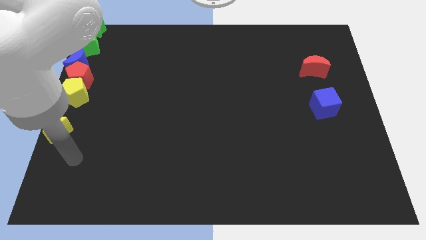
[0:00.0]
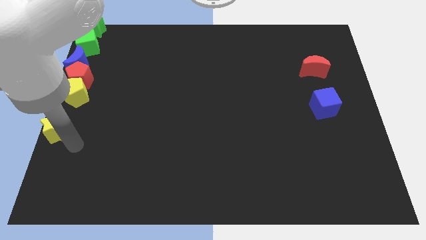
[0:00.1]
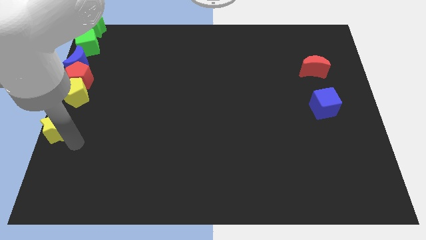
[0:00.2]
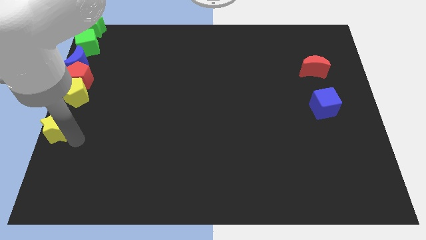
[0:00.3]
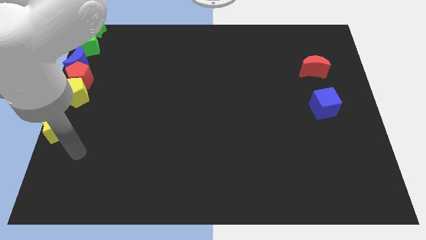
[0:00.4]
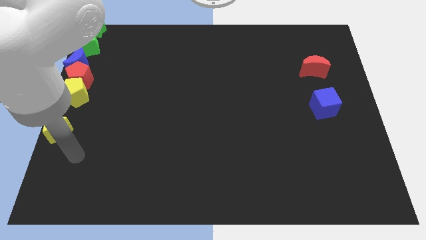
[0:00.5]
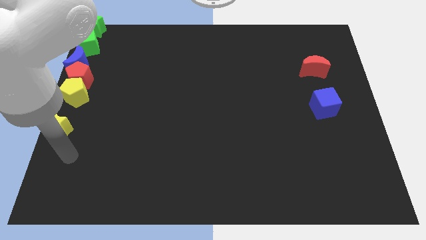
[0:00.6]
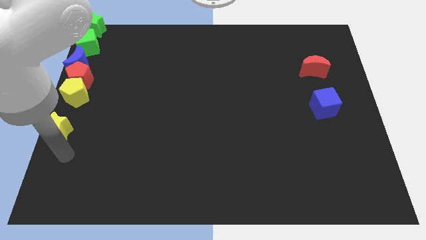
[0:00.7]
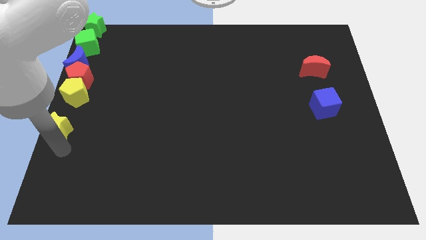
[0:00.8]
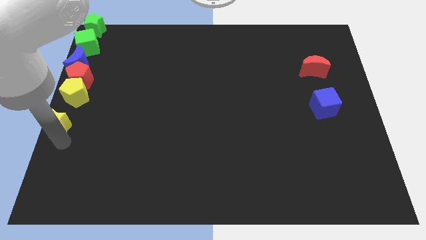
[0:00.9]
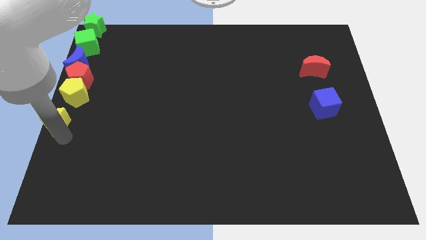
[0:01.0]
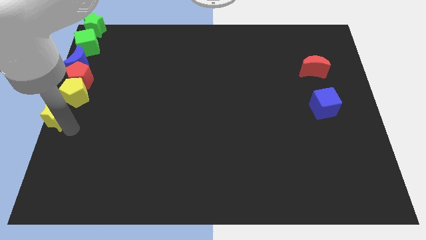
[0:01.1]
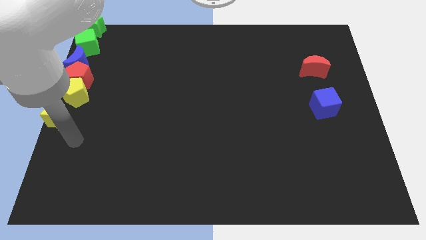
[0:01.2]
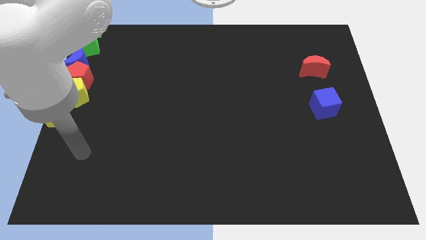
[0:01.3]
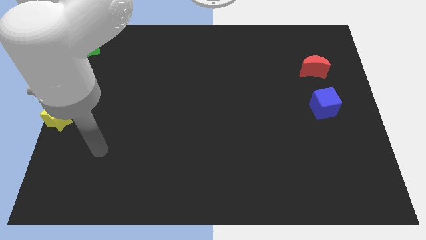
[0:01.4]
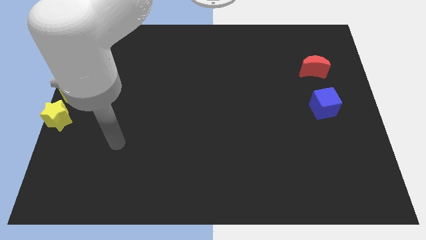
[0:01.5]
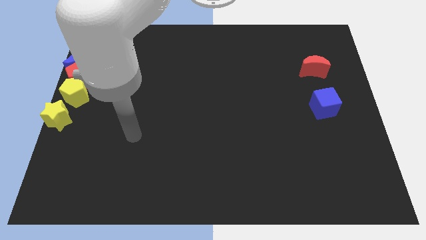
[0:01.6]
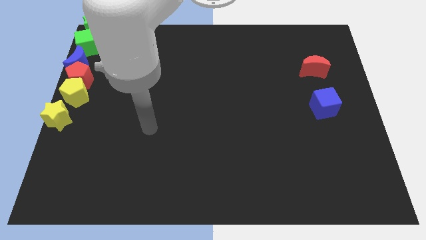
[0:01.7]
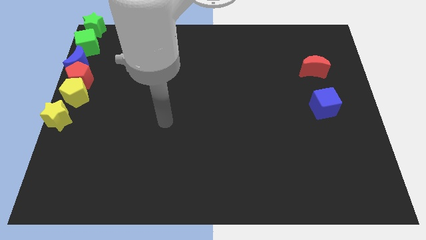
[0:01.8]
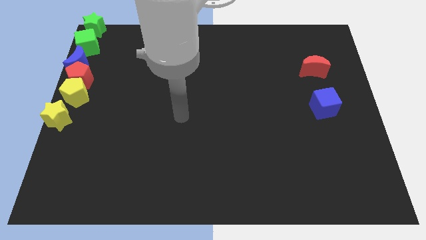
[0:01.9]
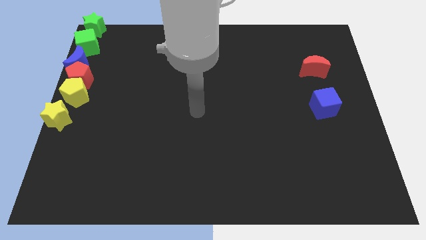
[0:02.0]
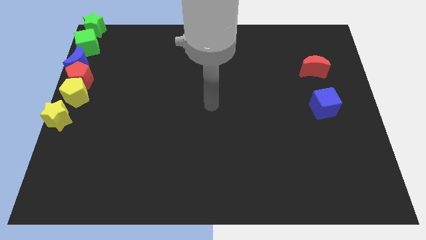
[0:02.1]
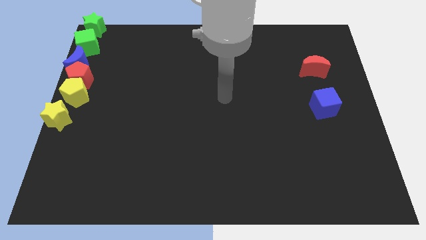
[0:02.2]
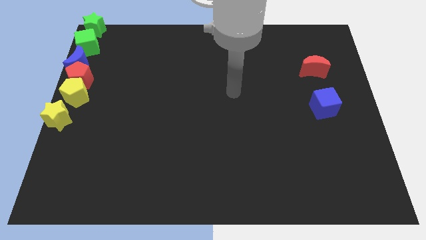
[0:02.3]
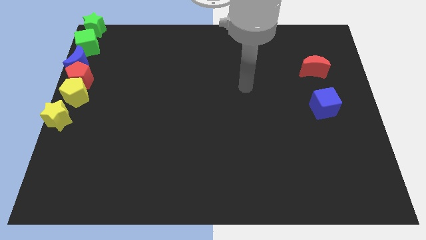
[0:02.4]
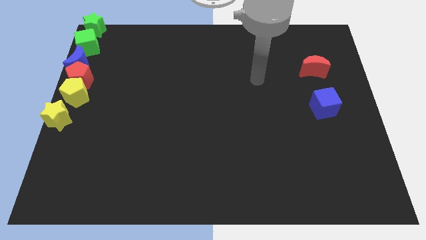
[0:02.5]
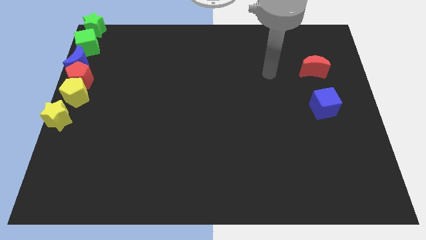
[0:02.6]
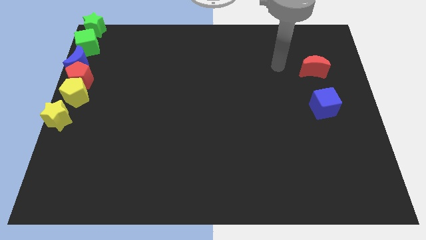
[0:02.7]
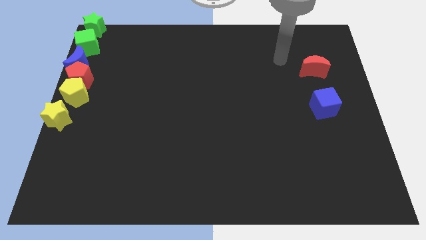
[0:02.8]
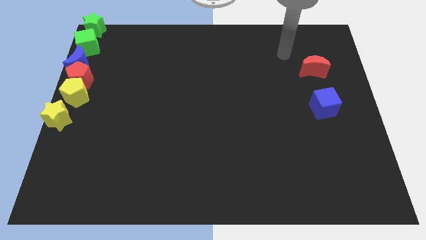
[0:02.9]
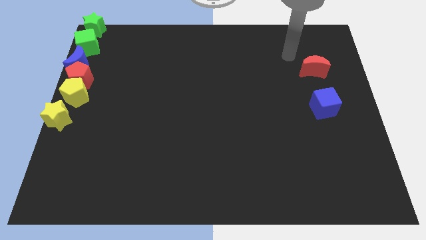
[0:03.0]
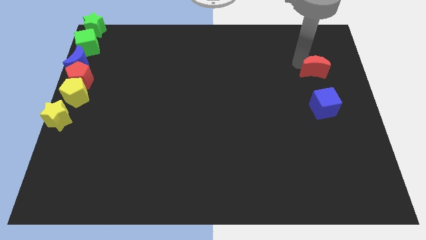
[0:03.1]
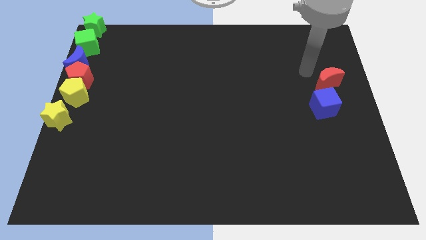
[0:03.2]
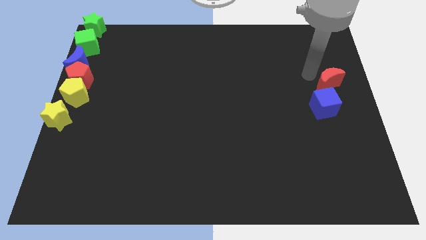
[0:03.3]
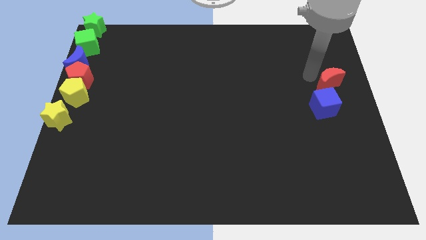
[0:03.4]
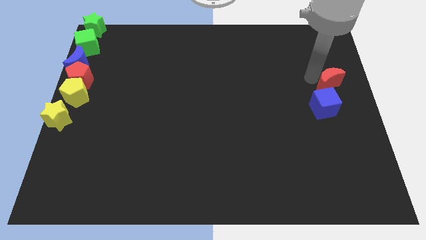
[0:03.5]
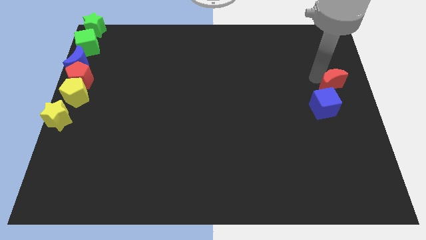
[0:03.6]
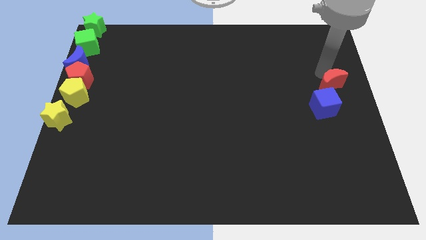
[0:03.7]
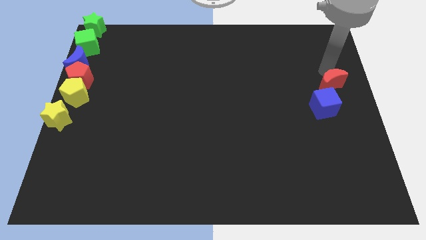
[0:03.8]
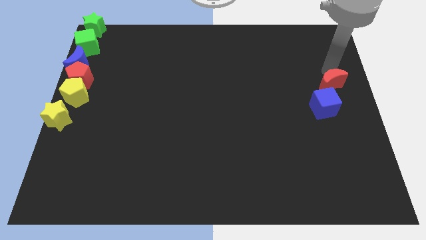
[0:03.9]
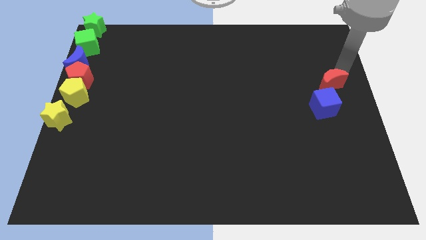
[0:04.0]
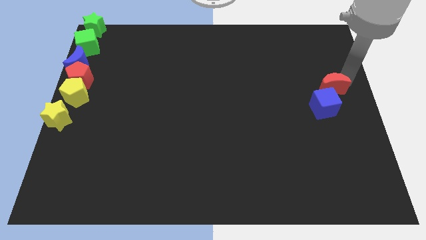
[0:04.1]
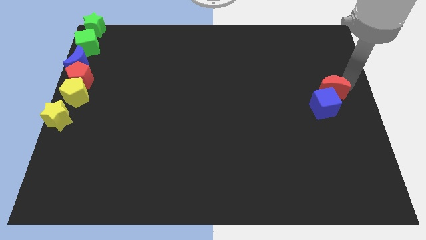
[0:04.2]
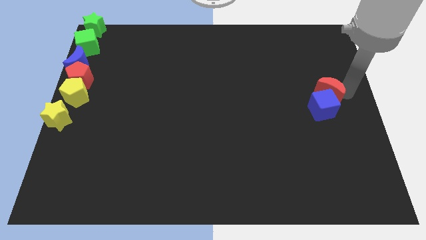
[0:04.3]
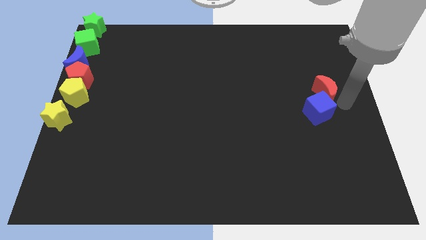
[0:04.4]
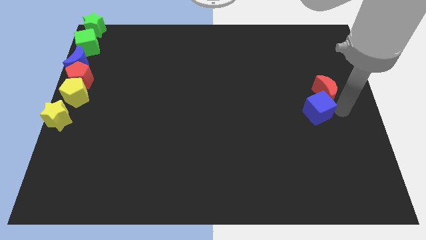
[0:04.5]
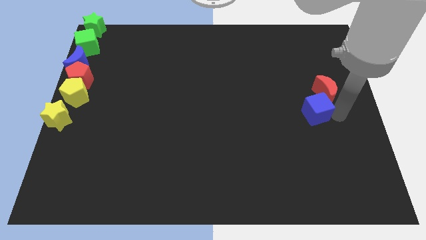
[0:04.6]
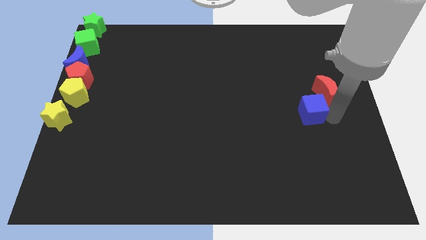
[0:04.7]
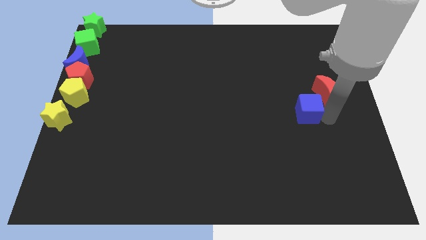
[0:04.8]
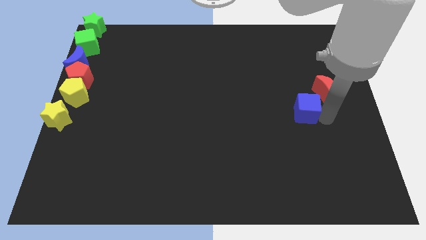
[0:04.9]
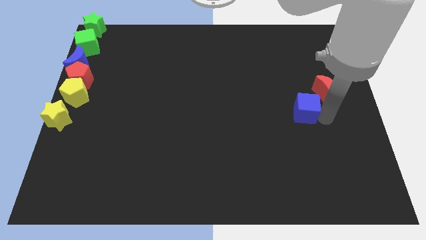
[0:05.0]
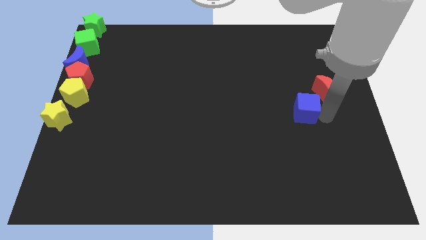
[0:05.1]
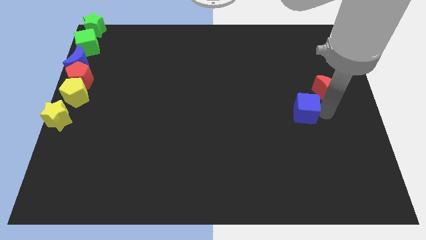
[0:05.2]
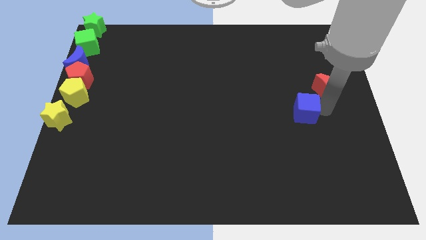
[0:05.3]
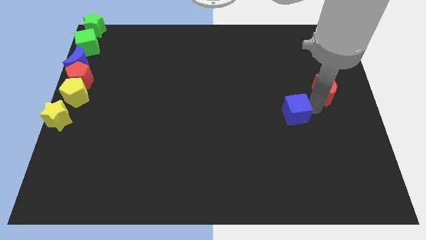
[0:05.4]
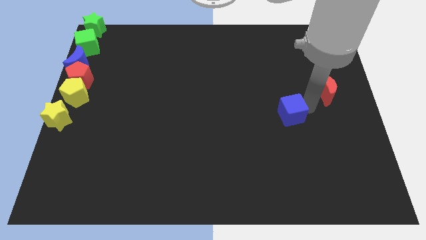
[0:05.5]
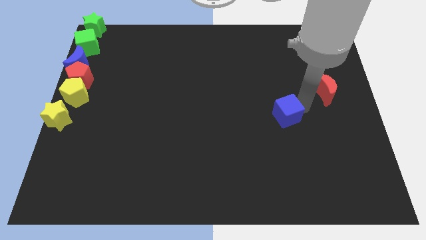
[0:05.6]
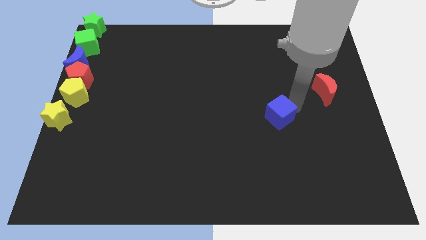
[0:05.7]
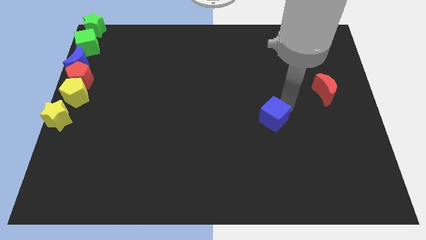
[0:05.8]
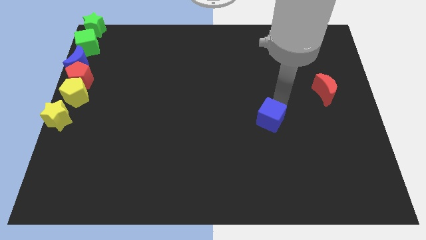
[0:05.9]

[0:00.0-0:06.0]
separate the red moon and blue cube

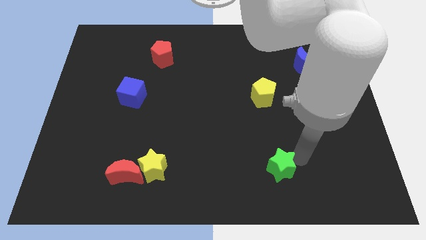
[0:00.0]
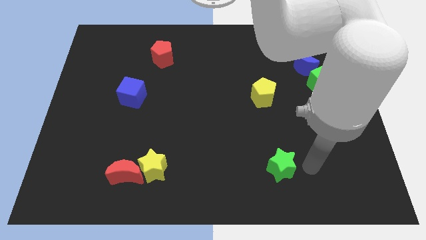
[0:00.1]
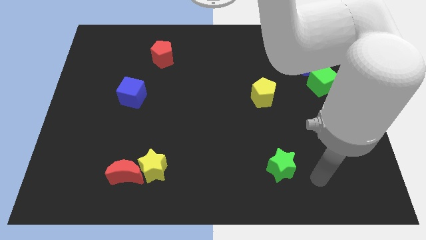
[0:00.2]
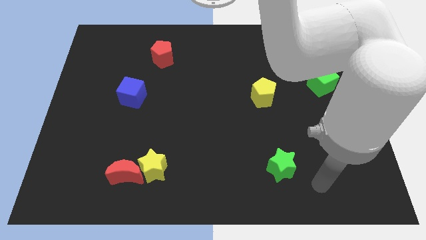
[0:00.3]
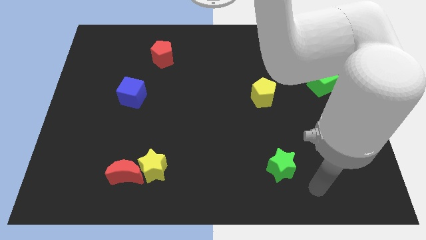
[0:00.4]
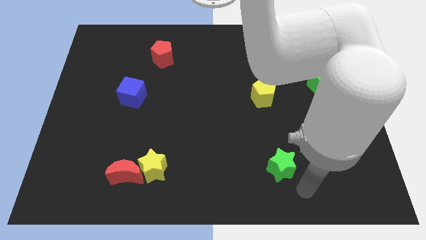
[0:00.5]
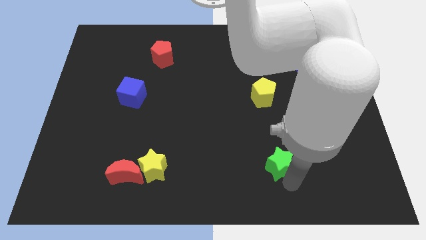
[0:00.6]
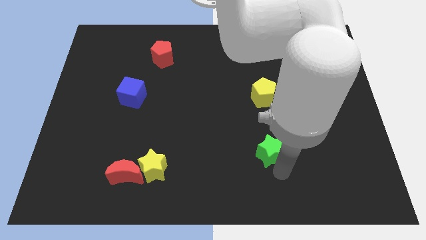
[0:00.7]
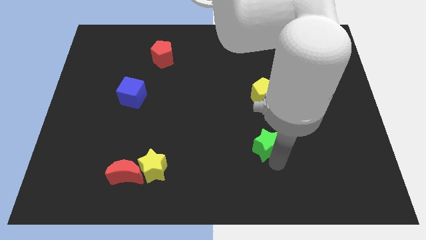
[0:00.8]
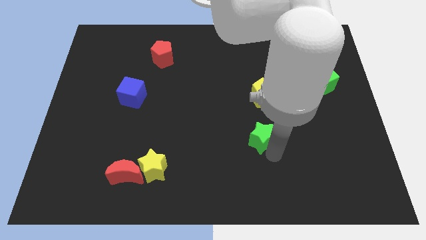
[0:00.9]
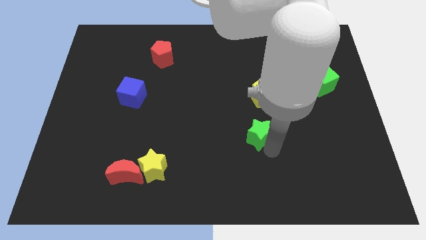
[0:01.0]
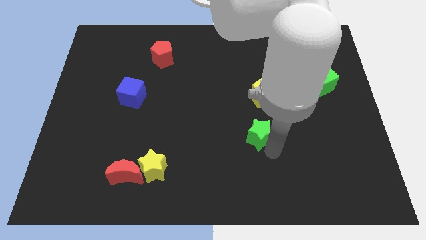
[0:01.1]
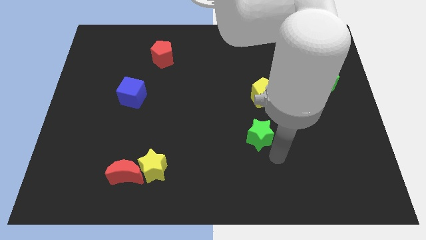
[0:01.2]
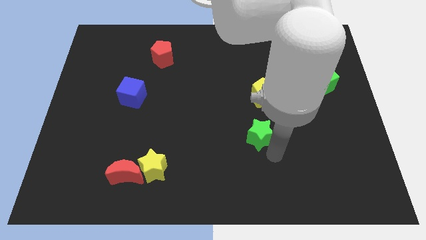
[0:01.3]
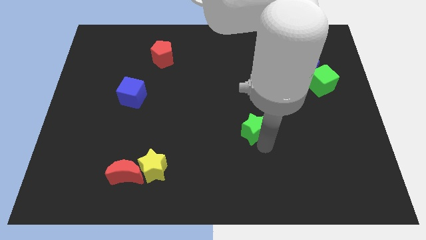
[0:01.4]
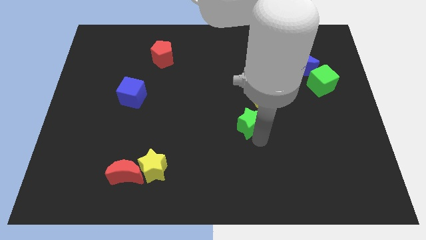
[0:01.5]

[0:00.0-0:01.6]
push the green star slightly upwards

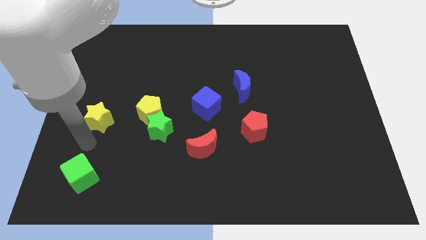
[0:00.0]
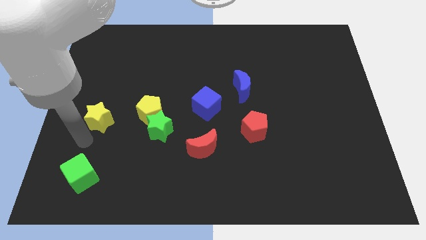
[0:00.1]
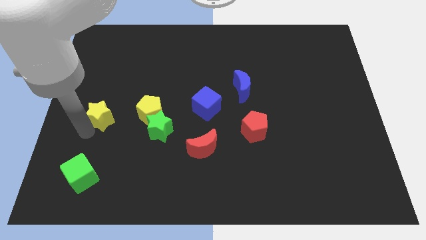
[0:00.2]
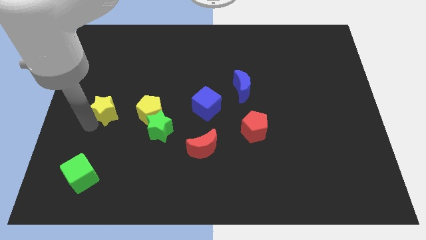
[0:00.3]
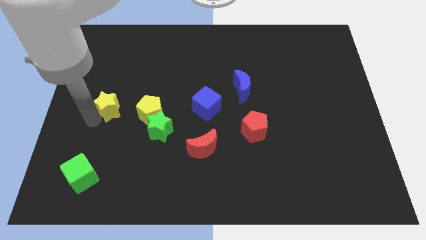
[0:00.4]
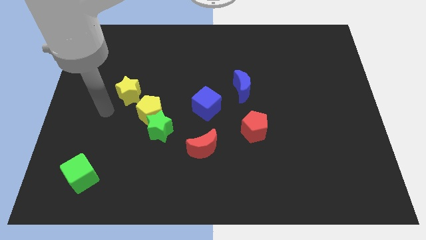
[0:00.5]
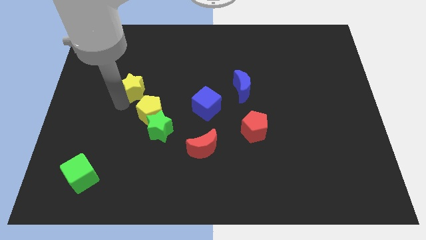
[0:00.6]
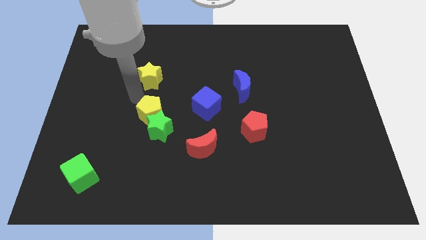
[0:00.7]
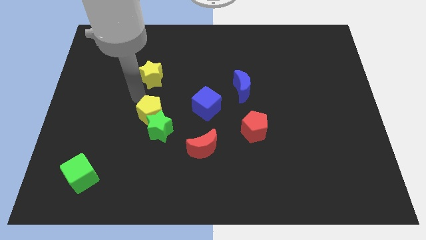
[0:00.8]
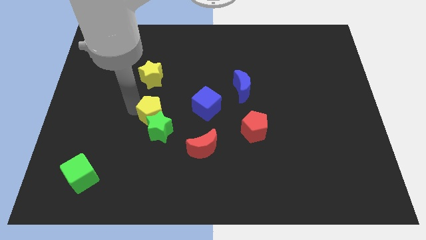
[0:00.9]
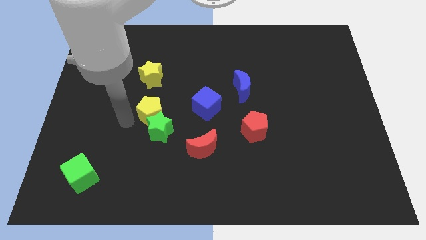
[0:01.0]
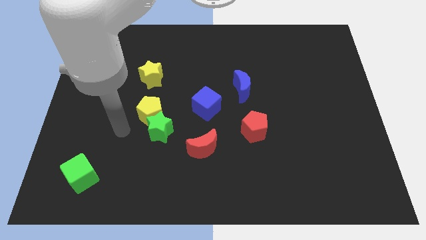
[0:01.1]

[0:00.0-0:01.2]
place the yellow star above the yellow pentagon

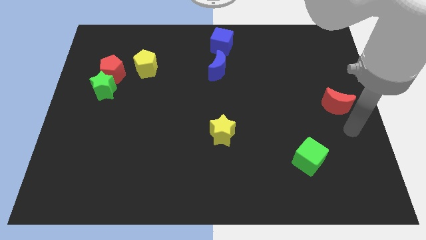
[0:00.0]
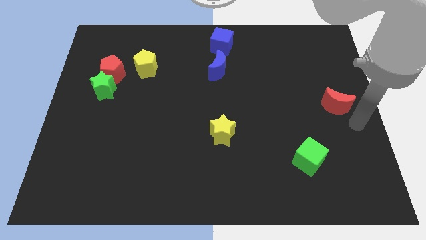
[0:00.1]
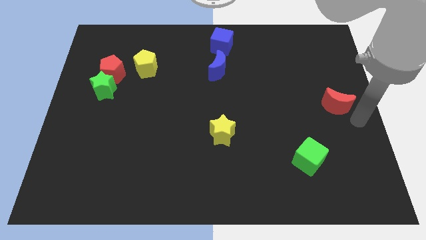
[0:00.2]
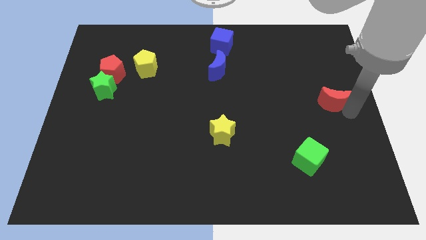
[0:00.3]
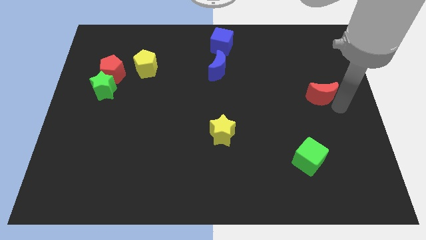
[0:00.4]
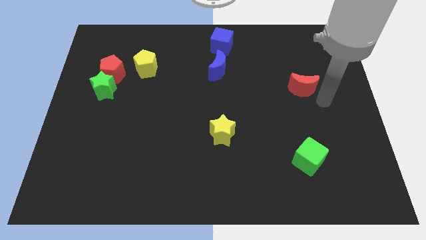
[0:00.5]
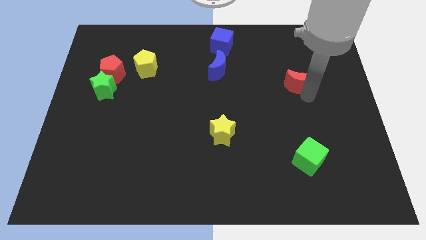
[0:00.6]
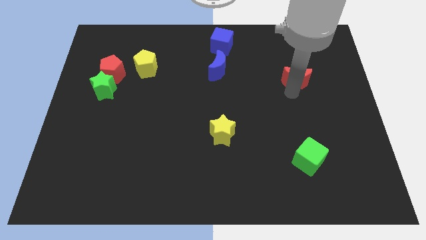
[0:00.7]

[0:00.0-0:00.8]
push red crescent above green cube
